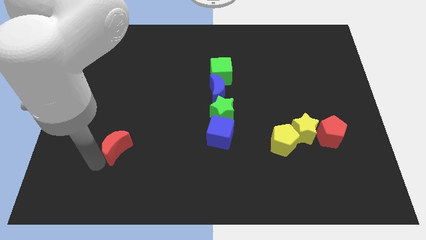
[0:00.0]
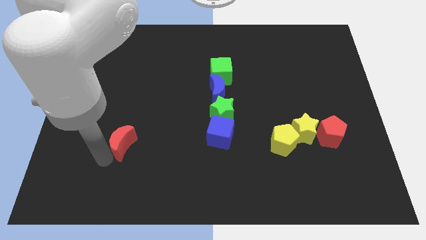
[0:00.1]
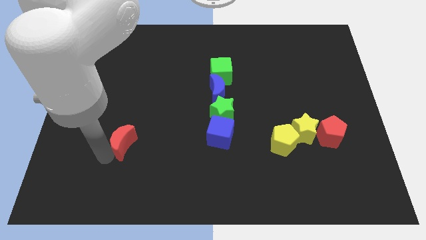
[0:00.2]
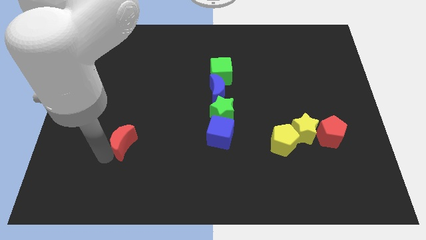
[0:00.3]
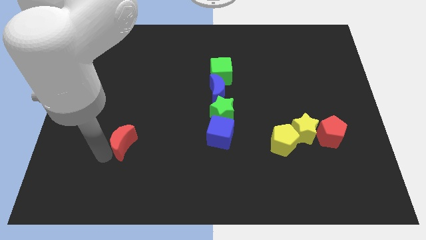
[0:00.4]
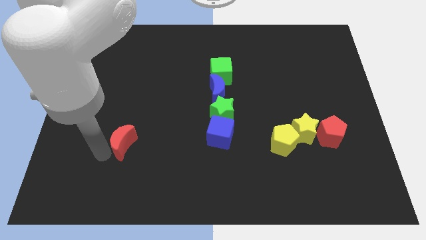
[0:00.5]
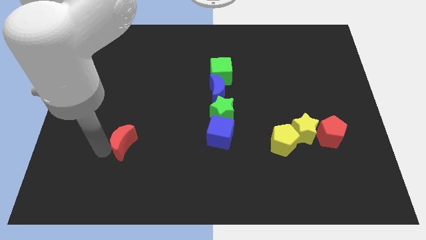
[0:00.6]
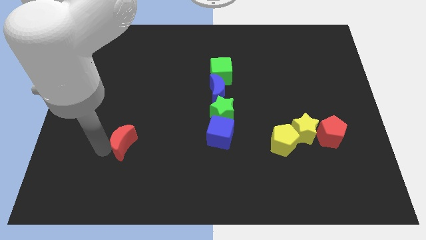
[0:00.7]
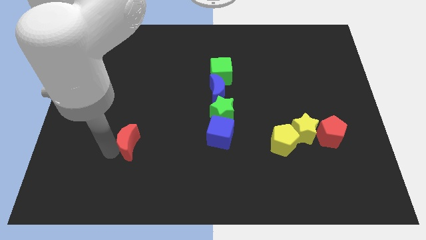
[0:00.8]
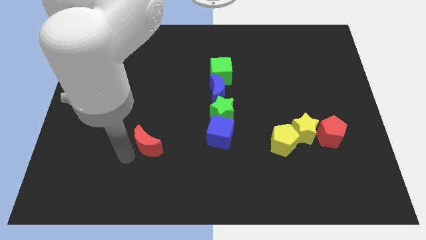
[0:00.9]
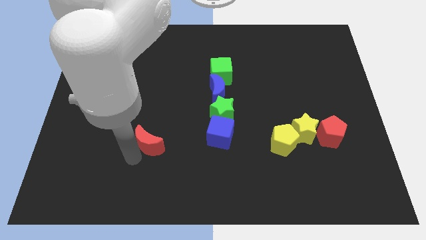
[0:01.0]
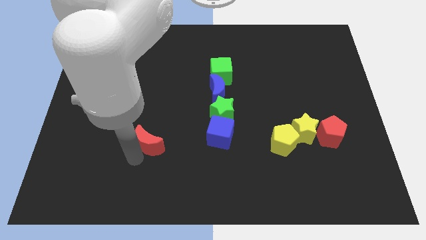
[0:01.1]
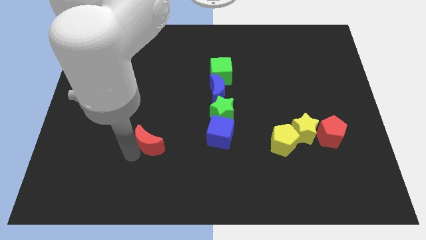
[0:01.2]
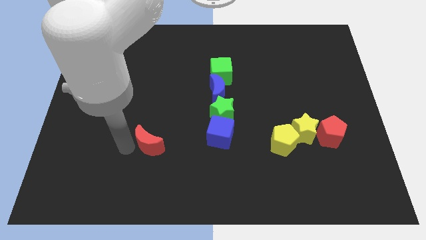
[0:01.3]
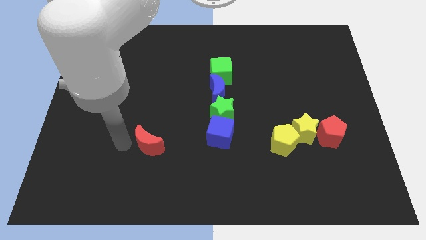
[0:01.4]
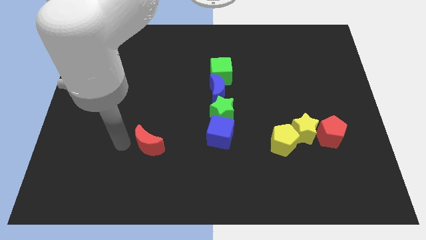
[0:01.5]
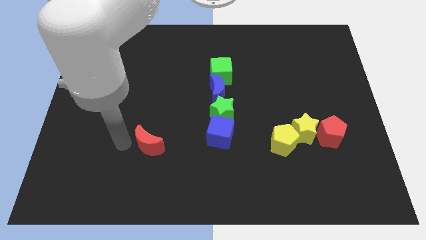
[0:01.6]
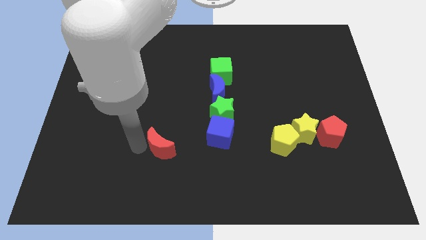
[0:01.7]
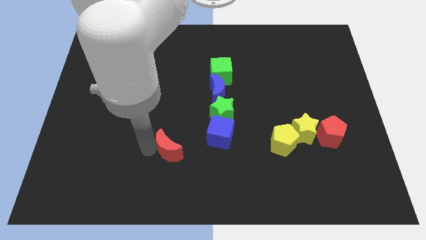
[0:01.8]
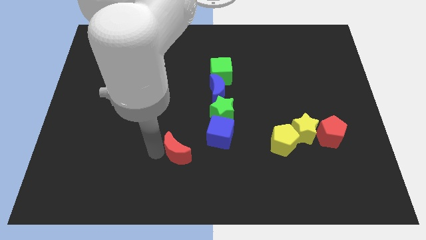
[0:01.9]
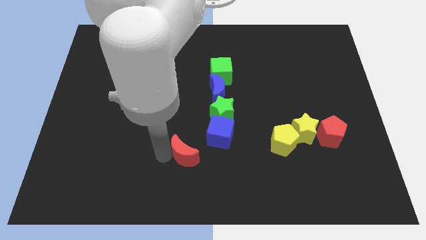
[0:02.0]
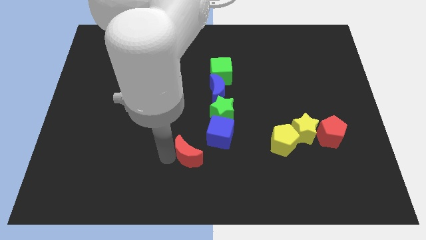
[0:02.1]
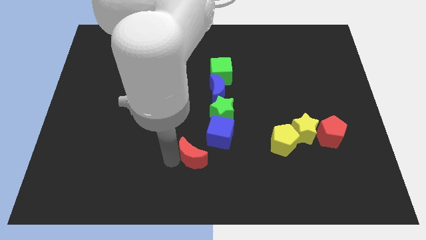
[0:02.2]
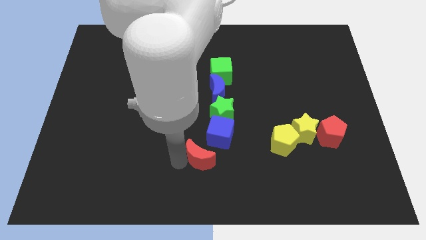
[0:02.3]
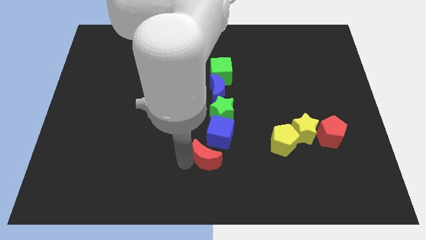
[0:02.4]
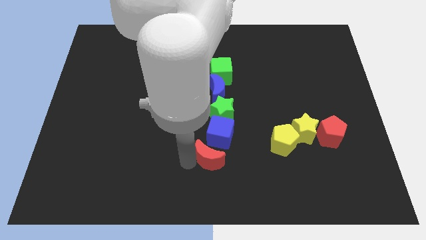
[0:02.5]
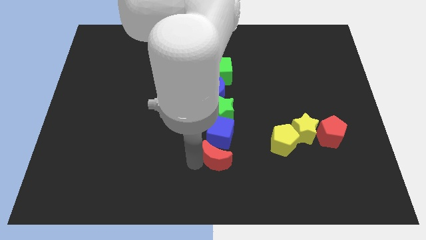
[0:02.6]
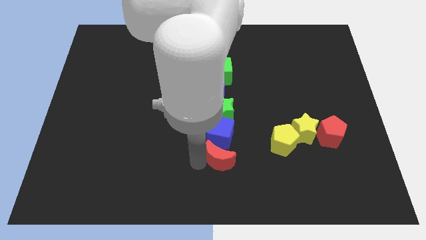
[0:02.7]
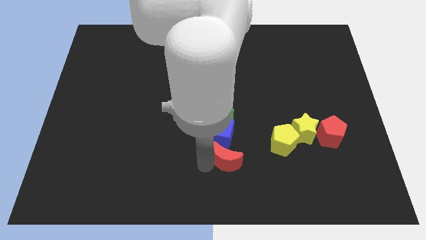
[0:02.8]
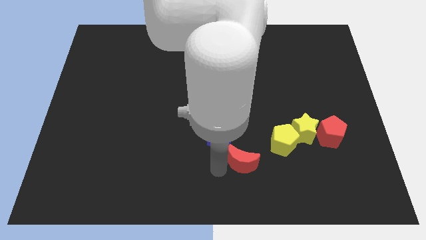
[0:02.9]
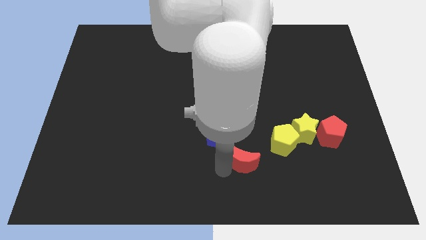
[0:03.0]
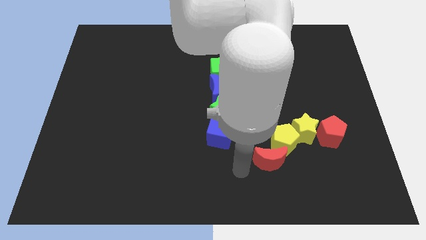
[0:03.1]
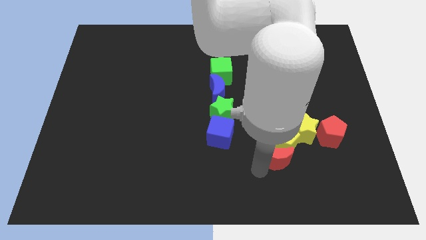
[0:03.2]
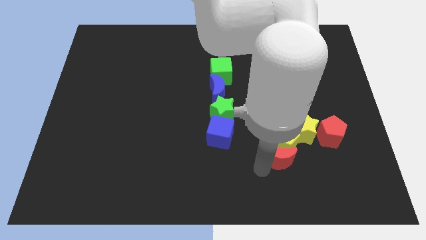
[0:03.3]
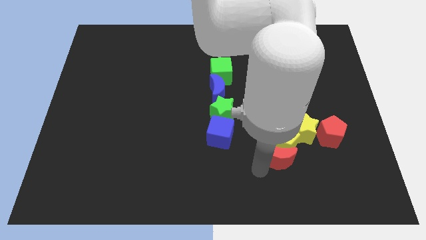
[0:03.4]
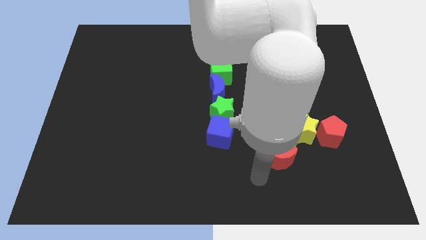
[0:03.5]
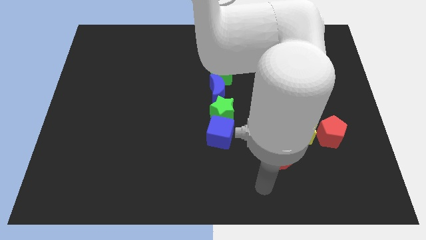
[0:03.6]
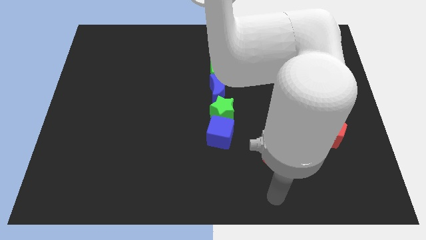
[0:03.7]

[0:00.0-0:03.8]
place red crescent near the yellow pentagon

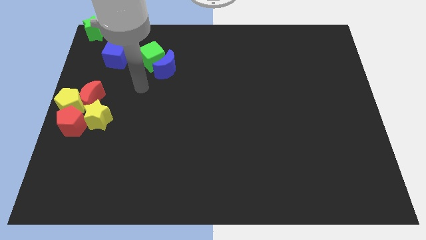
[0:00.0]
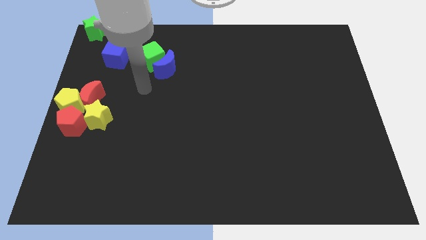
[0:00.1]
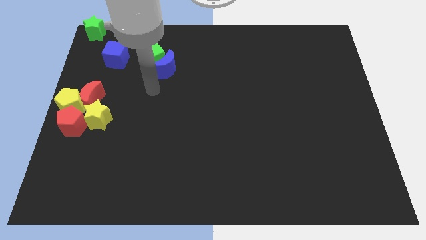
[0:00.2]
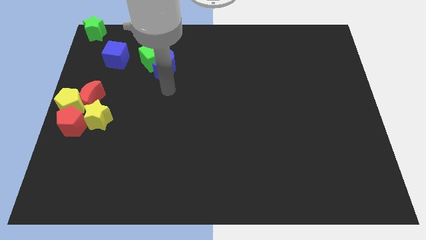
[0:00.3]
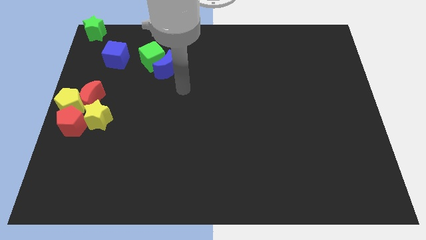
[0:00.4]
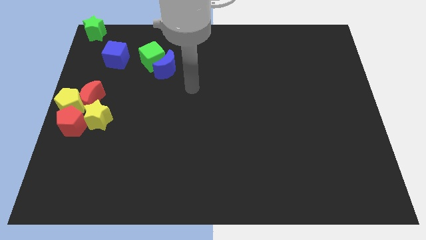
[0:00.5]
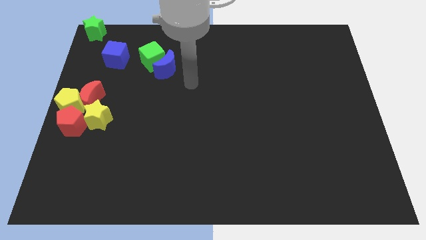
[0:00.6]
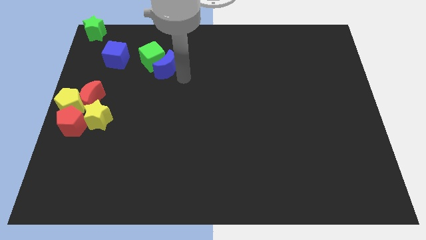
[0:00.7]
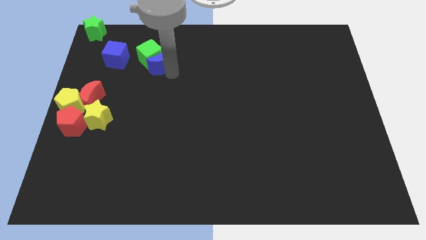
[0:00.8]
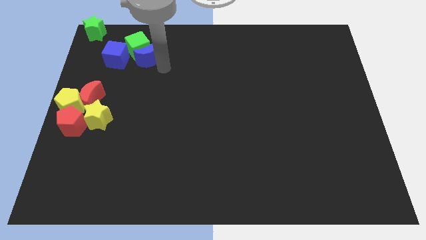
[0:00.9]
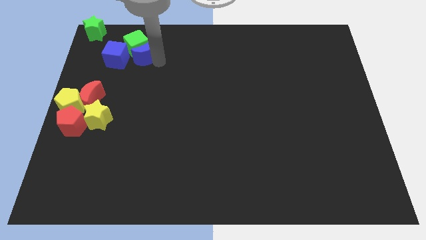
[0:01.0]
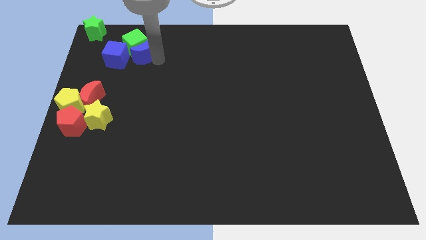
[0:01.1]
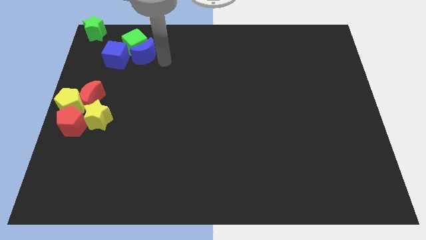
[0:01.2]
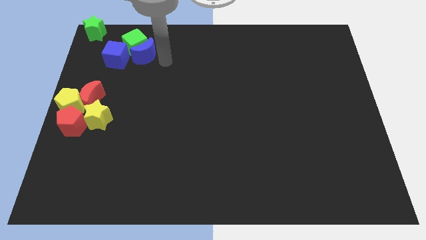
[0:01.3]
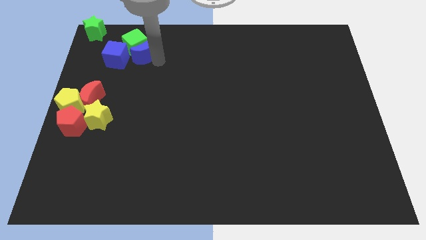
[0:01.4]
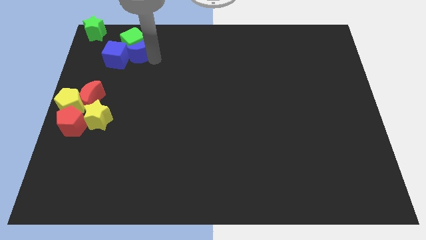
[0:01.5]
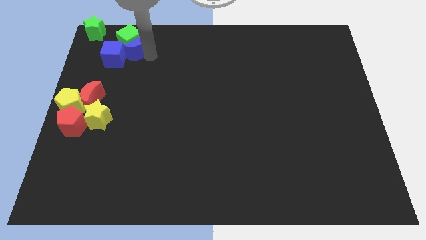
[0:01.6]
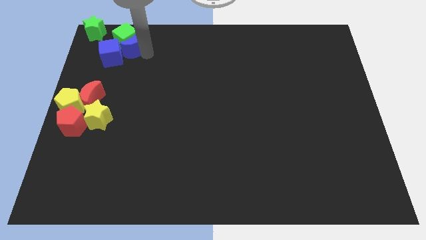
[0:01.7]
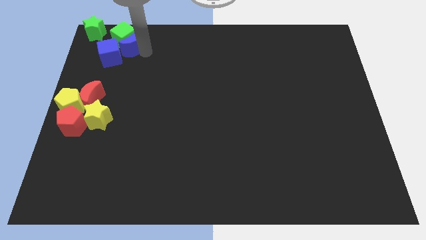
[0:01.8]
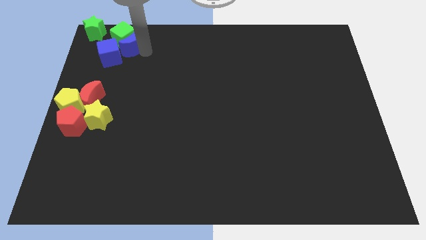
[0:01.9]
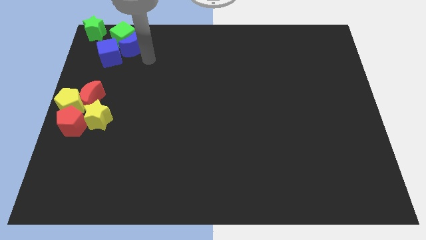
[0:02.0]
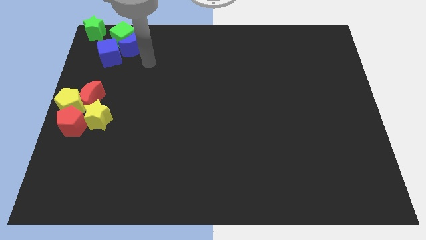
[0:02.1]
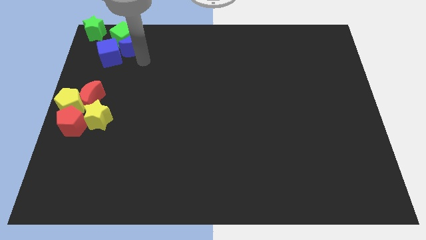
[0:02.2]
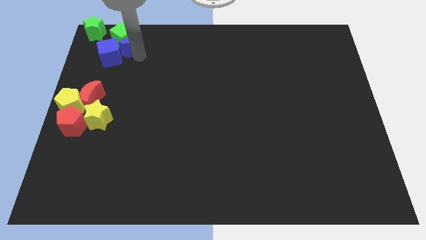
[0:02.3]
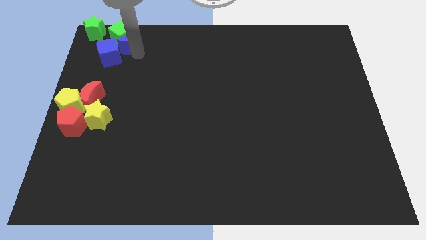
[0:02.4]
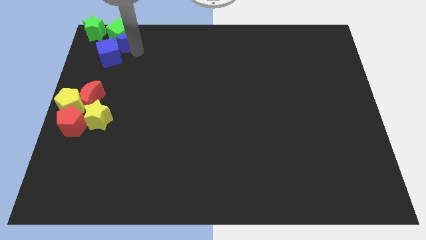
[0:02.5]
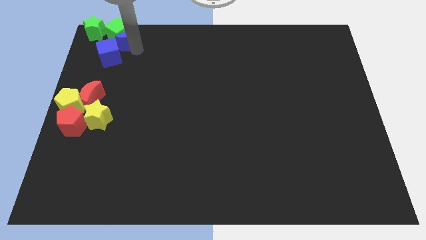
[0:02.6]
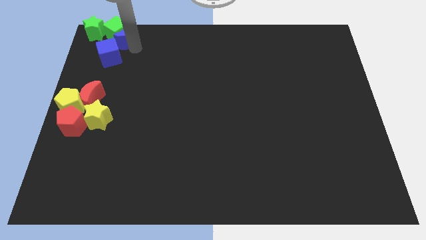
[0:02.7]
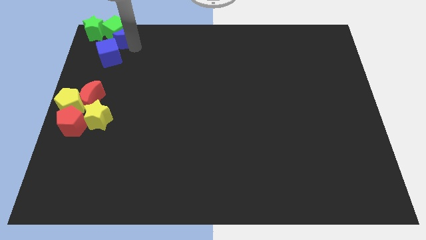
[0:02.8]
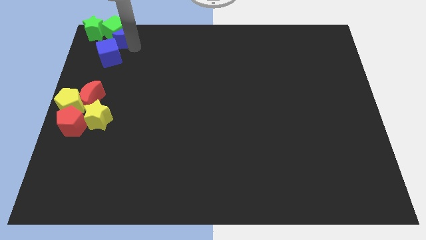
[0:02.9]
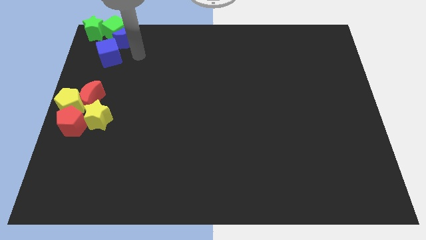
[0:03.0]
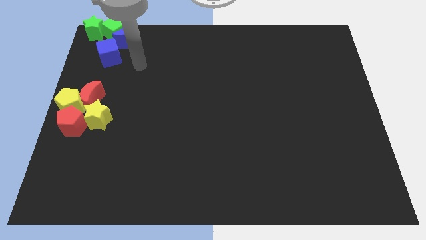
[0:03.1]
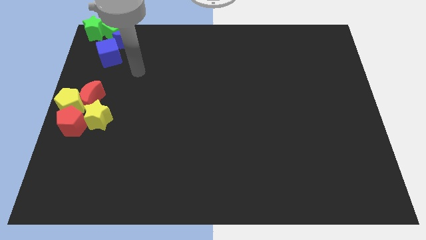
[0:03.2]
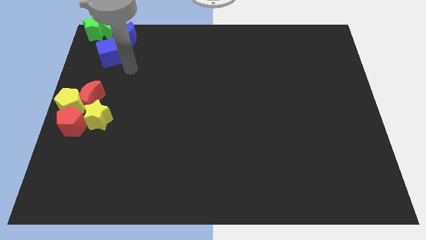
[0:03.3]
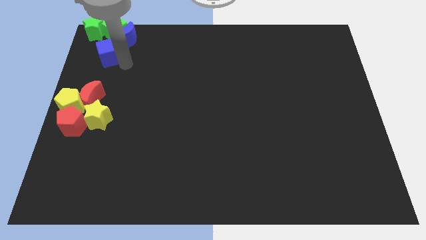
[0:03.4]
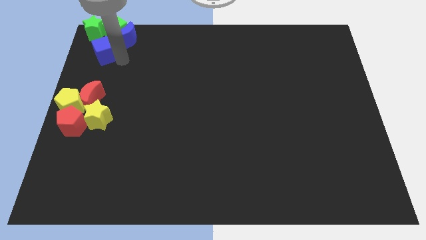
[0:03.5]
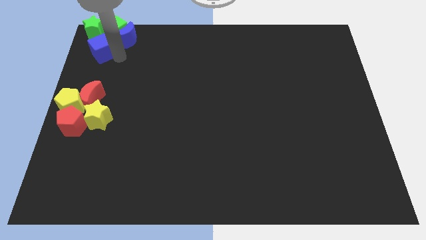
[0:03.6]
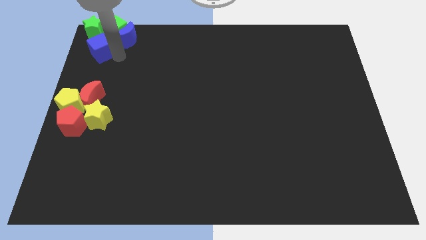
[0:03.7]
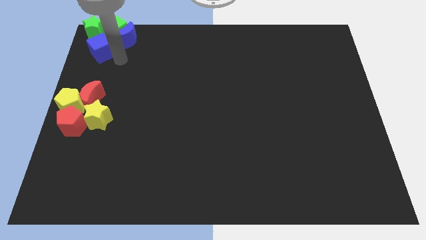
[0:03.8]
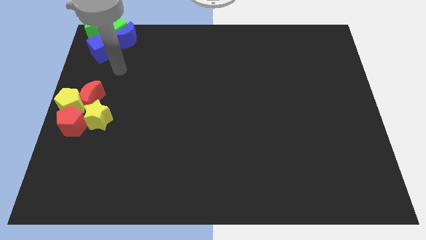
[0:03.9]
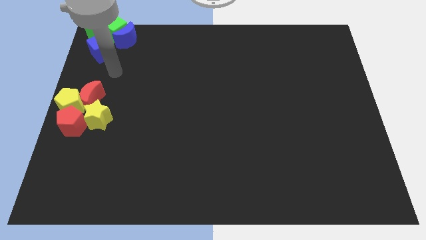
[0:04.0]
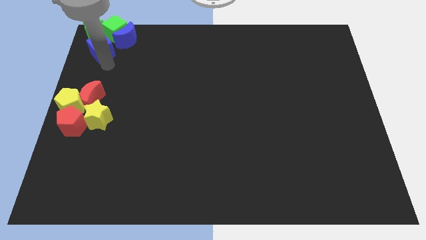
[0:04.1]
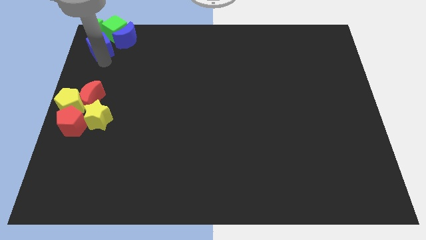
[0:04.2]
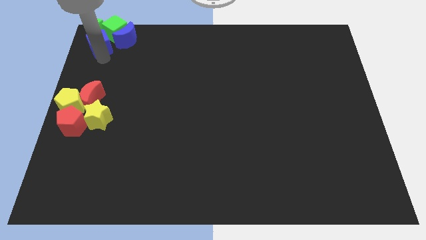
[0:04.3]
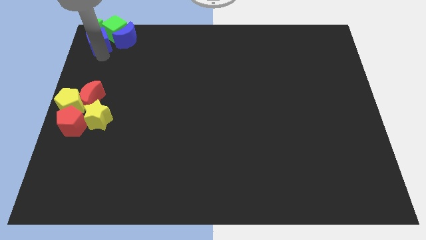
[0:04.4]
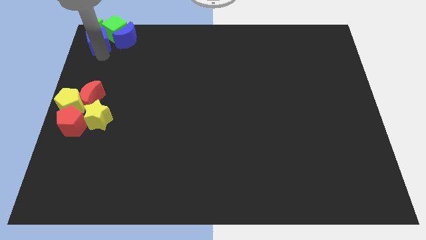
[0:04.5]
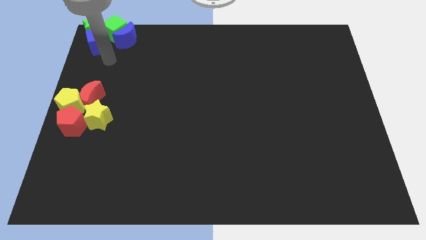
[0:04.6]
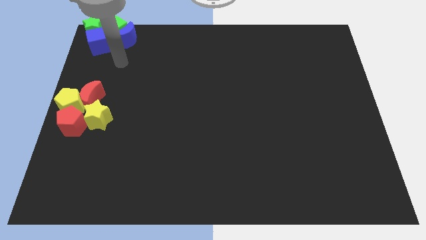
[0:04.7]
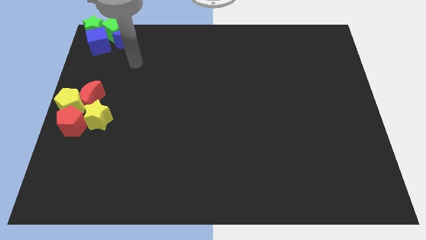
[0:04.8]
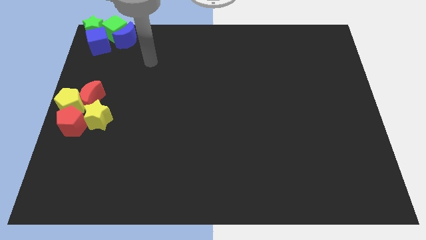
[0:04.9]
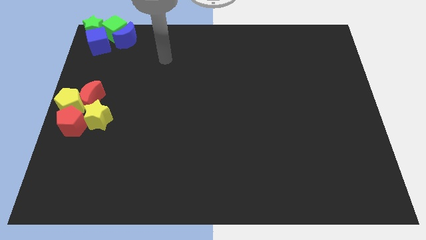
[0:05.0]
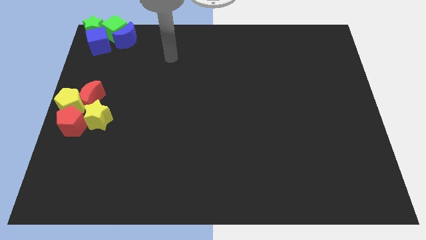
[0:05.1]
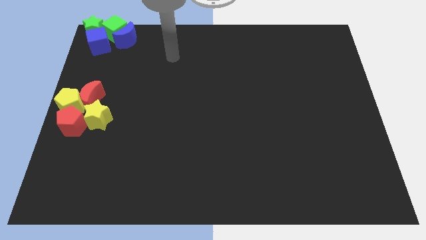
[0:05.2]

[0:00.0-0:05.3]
group up the green and blue blocks together at the top left corner of the board
